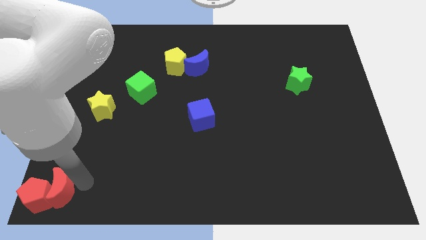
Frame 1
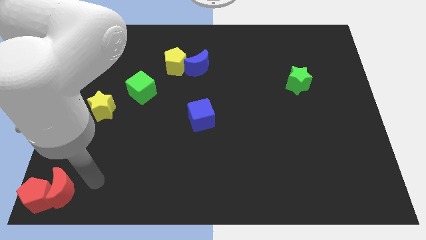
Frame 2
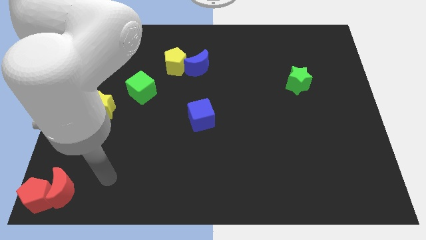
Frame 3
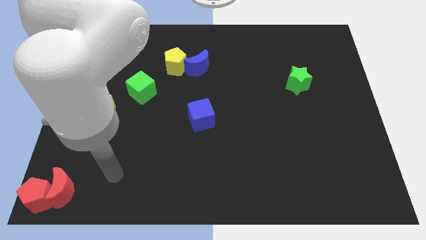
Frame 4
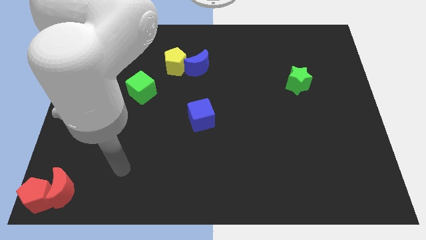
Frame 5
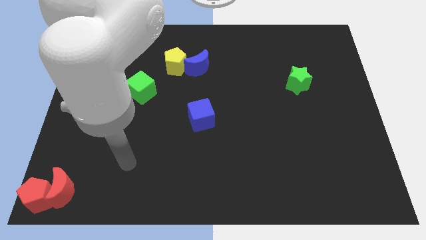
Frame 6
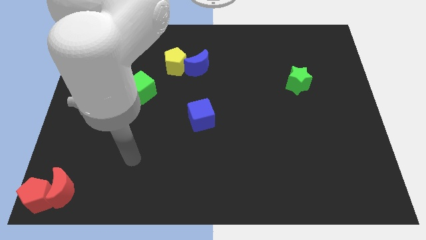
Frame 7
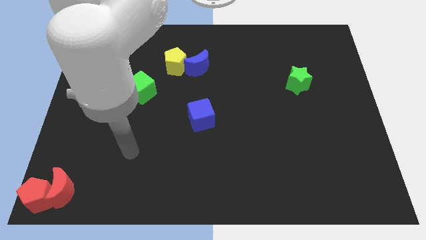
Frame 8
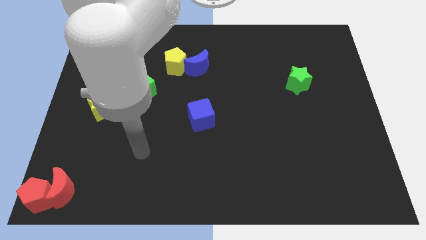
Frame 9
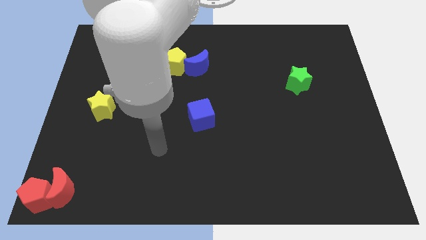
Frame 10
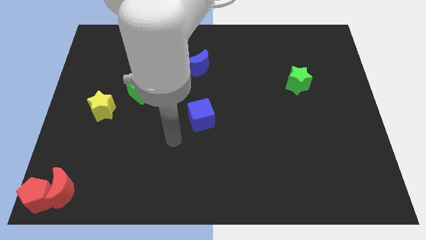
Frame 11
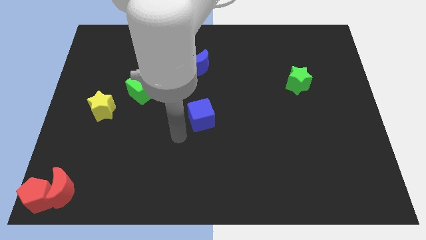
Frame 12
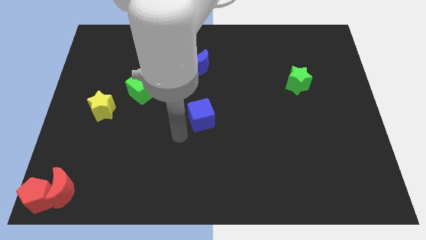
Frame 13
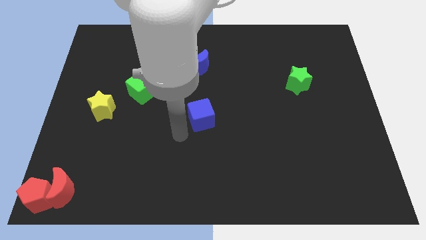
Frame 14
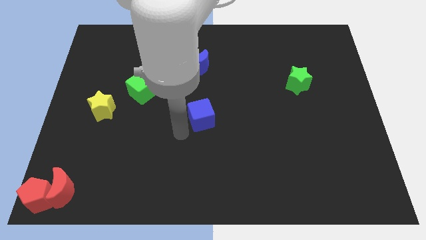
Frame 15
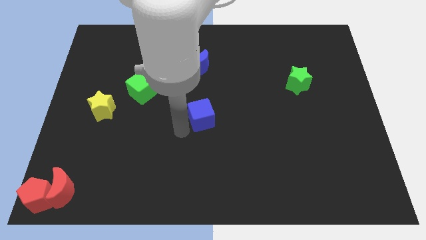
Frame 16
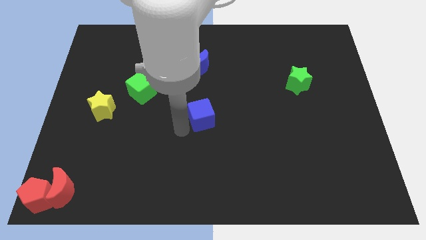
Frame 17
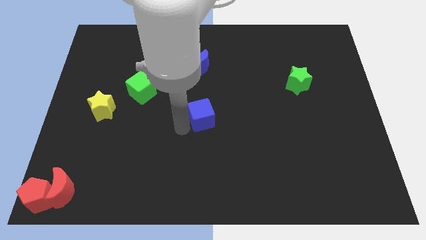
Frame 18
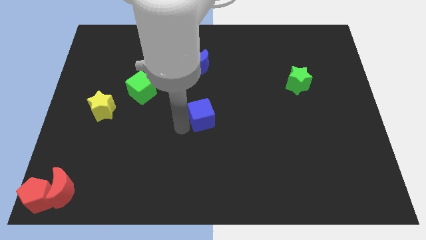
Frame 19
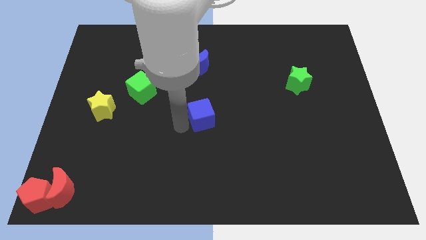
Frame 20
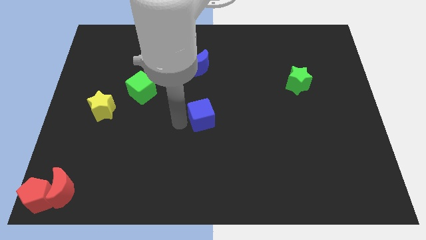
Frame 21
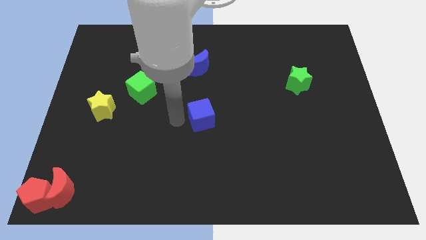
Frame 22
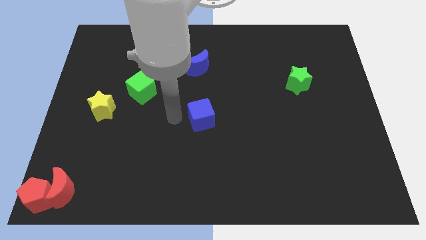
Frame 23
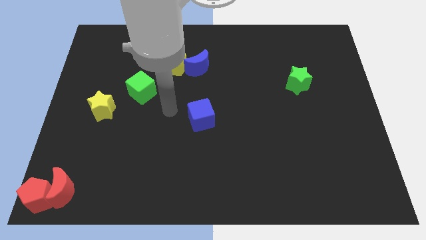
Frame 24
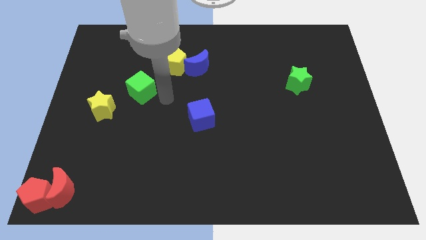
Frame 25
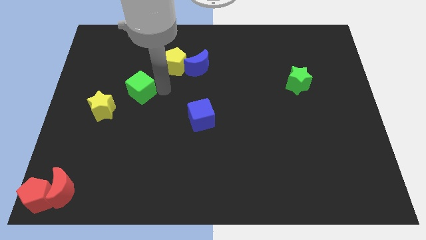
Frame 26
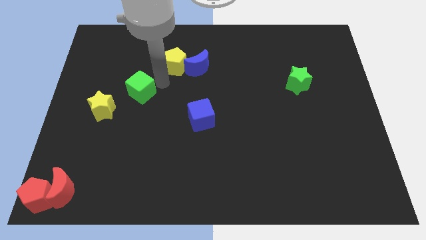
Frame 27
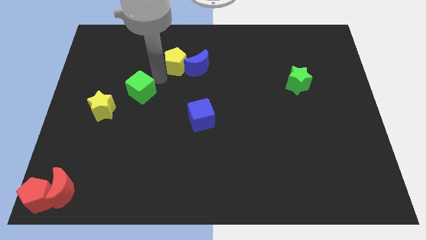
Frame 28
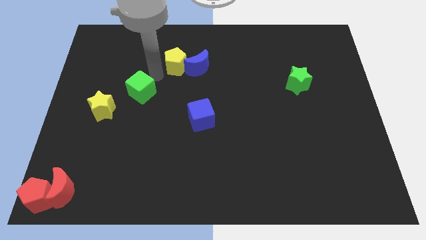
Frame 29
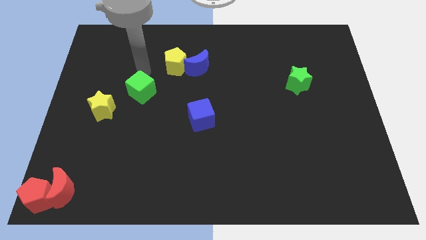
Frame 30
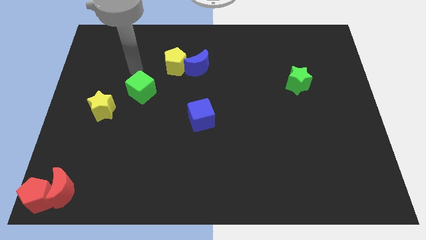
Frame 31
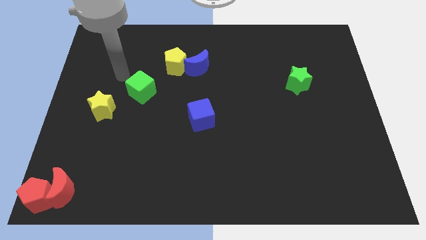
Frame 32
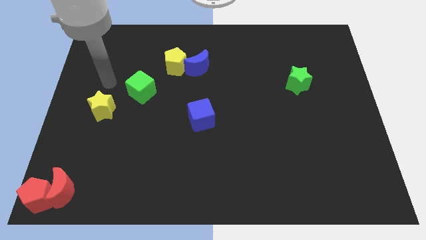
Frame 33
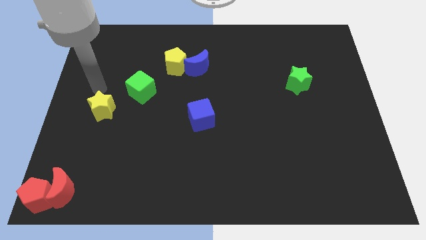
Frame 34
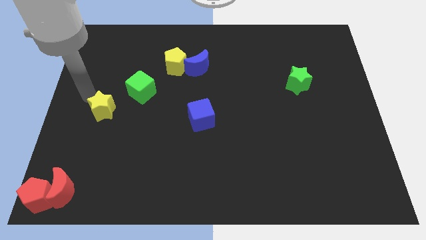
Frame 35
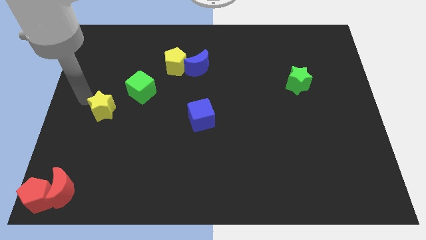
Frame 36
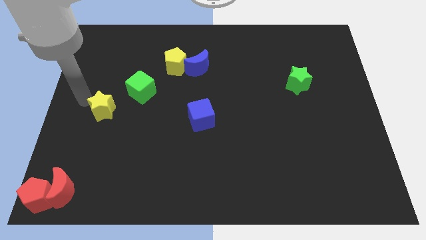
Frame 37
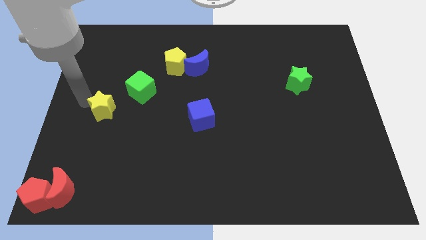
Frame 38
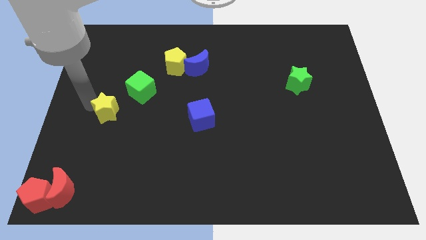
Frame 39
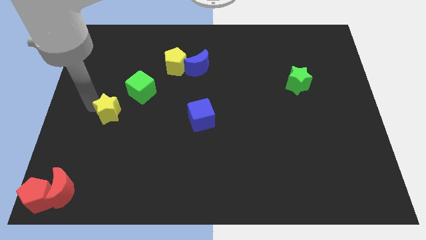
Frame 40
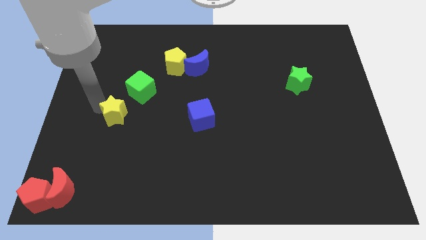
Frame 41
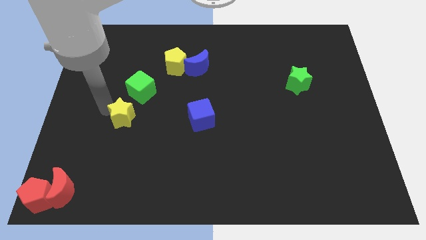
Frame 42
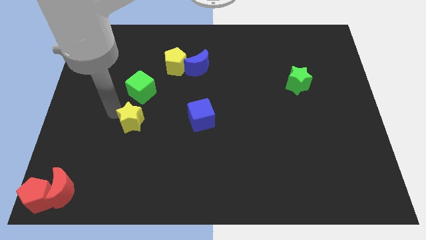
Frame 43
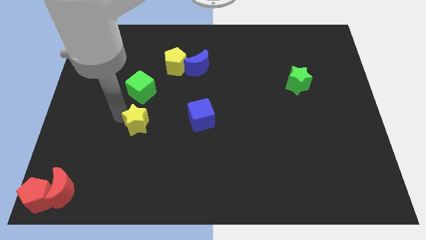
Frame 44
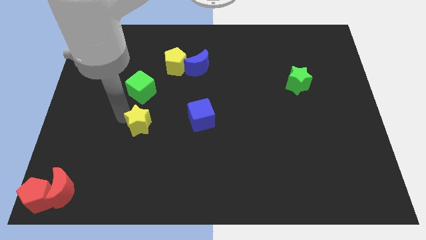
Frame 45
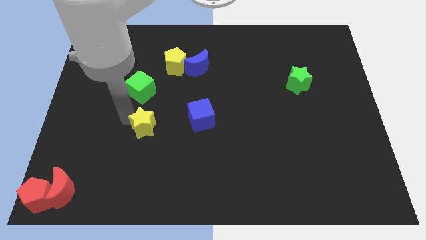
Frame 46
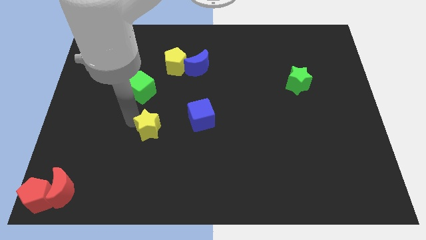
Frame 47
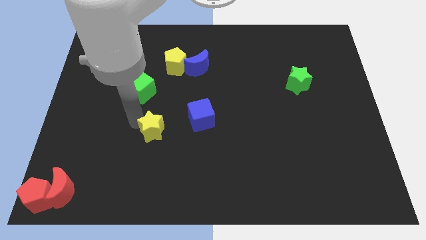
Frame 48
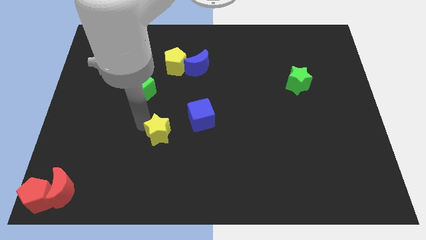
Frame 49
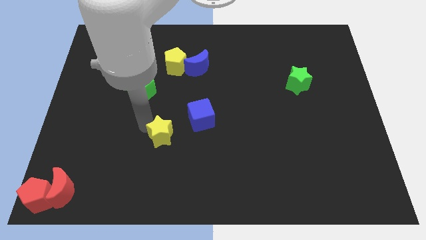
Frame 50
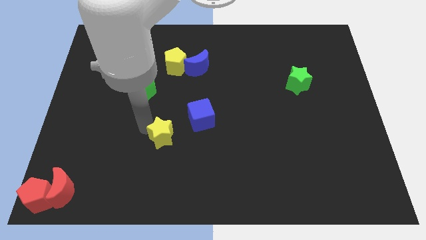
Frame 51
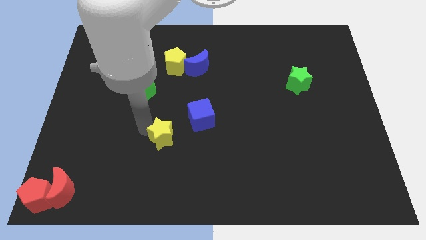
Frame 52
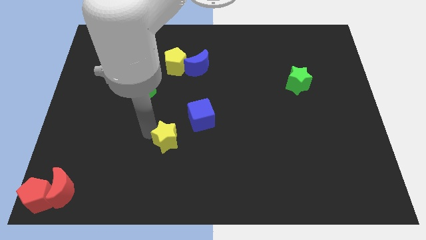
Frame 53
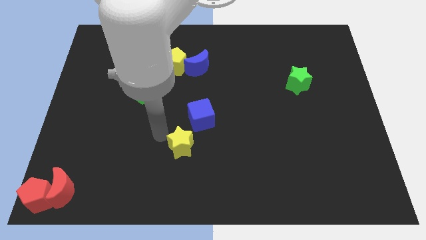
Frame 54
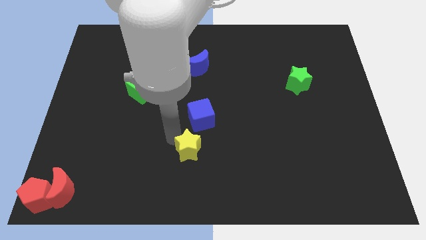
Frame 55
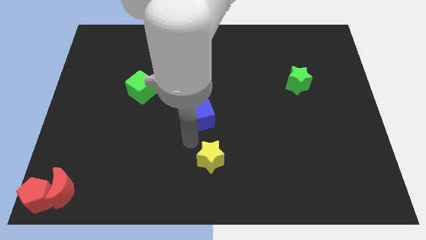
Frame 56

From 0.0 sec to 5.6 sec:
place the yellow star at the bottom side of the blue cube

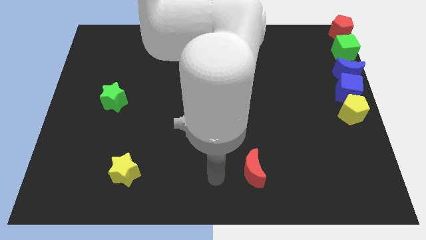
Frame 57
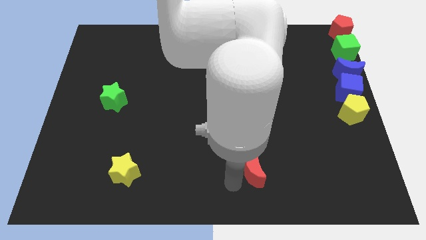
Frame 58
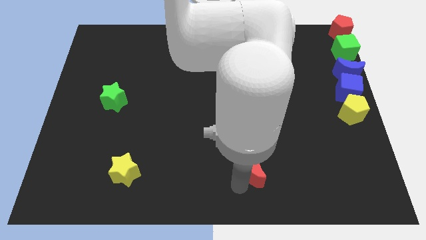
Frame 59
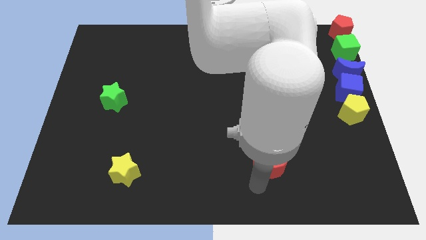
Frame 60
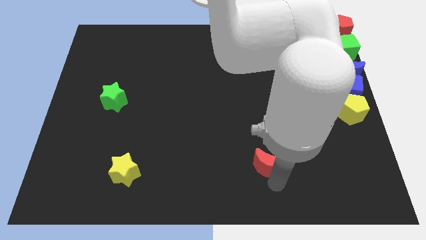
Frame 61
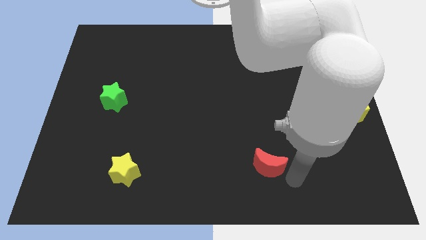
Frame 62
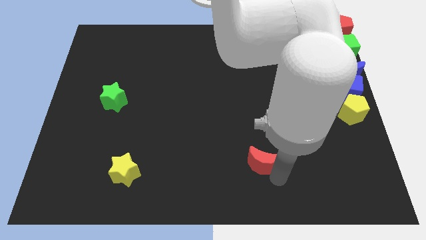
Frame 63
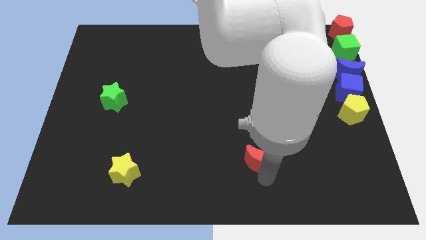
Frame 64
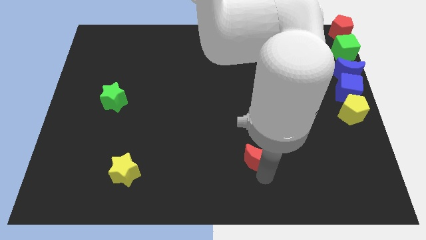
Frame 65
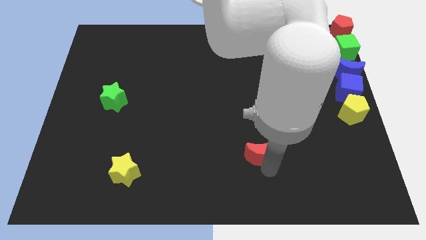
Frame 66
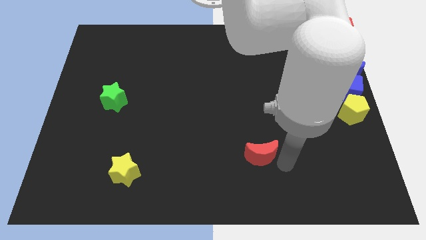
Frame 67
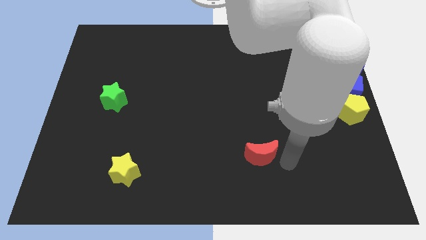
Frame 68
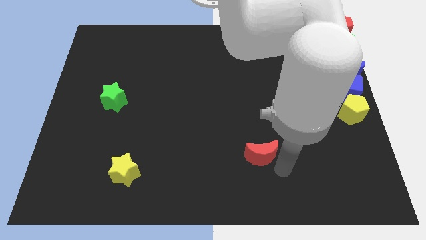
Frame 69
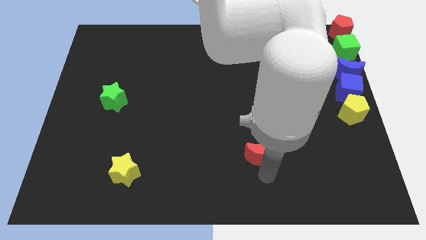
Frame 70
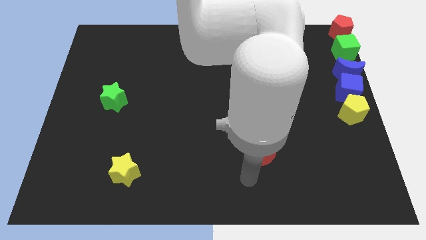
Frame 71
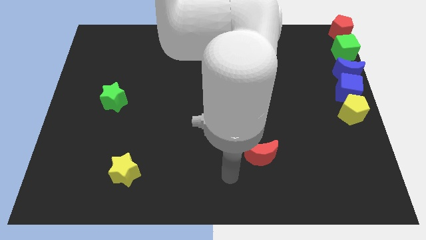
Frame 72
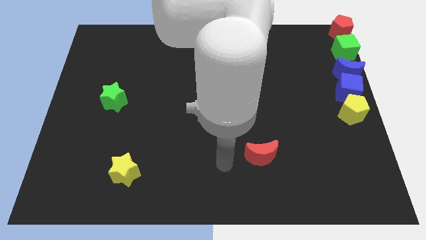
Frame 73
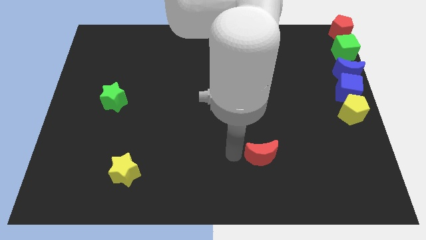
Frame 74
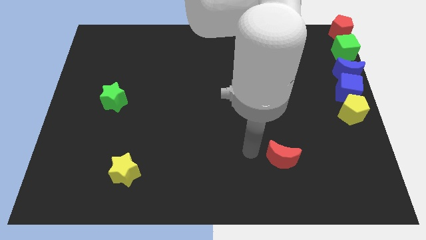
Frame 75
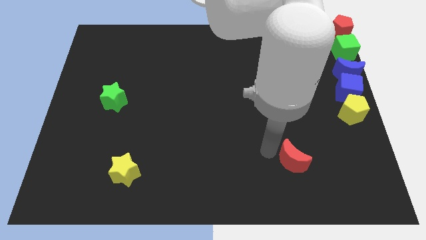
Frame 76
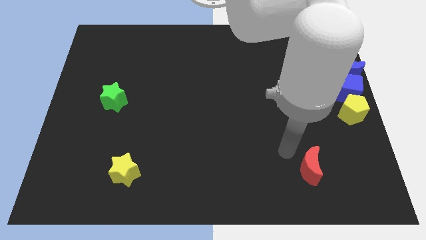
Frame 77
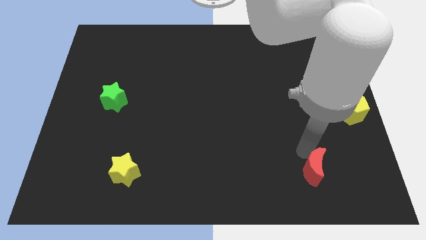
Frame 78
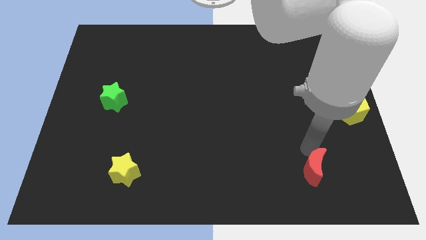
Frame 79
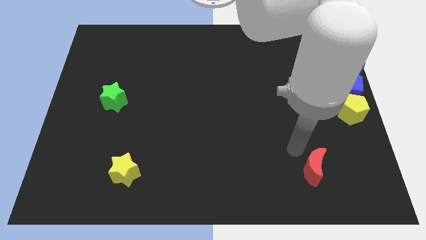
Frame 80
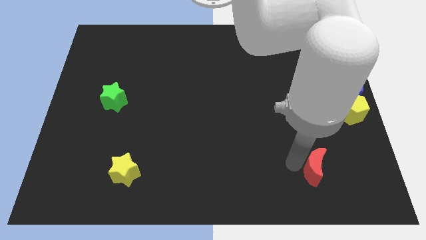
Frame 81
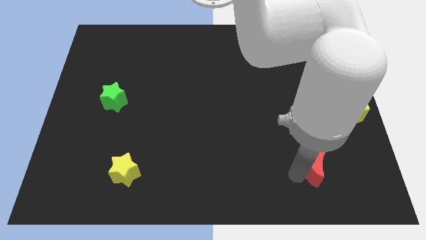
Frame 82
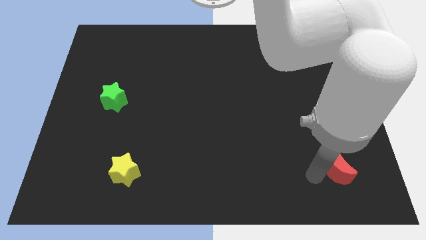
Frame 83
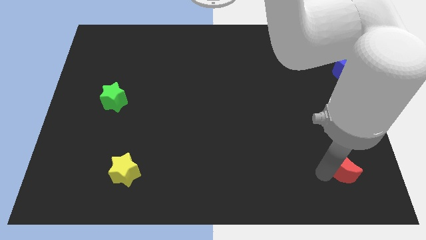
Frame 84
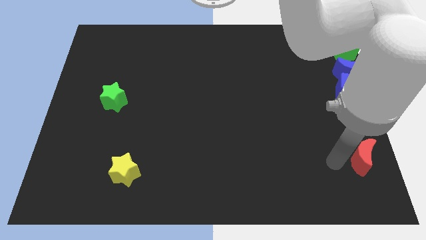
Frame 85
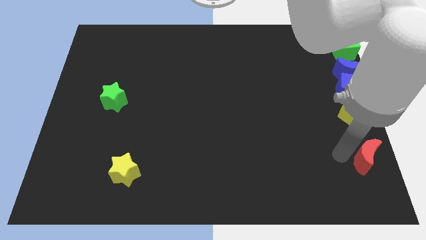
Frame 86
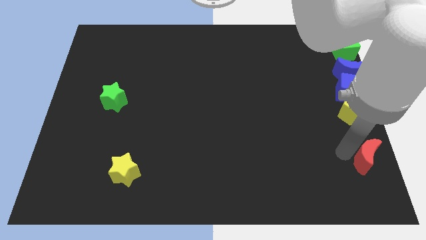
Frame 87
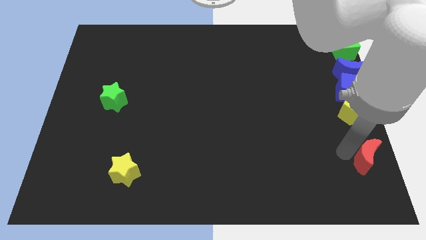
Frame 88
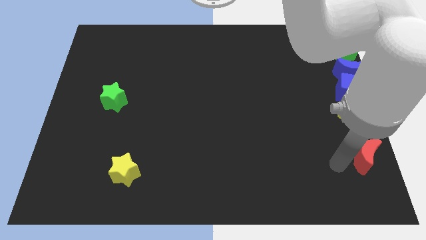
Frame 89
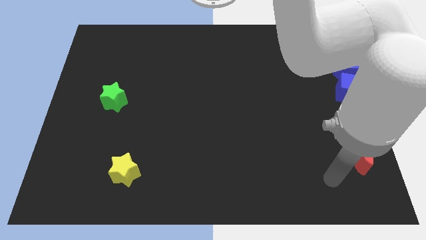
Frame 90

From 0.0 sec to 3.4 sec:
move the red moon to the bottom right of the board

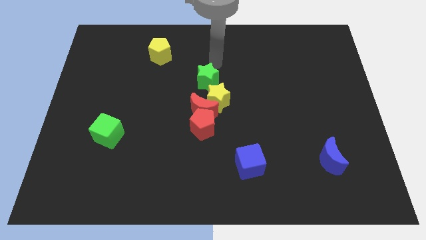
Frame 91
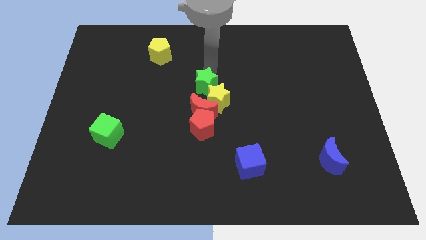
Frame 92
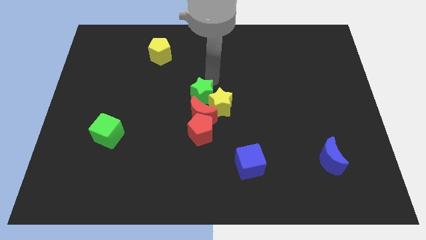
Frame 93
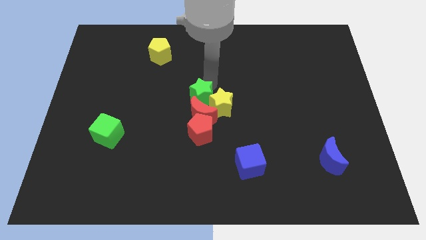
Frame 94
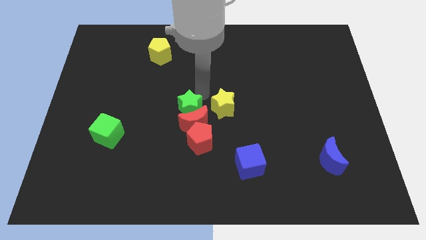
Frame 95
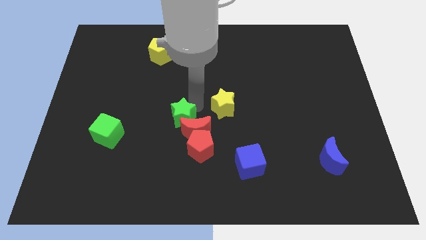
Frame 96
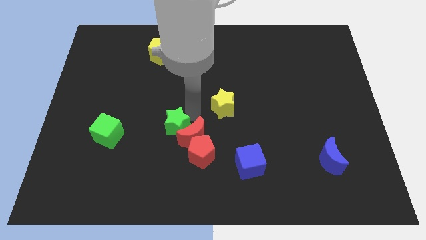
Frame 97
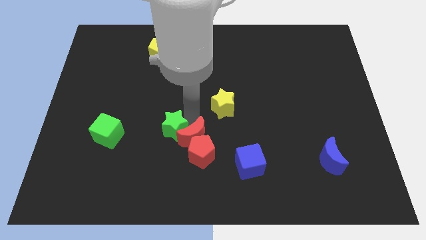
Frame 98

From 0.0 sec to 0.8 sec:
push the green star into the group of blocks
